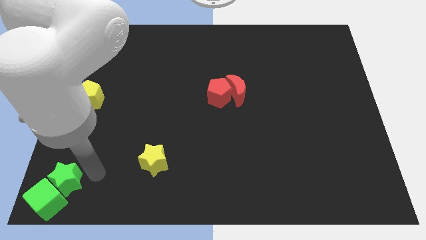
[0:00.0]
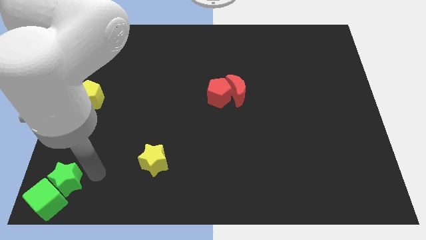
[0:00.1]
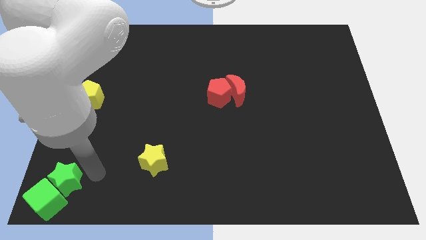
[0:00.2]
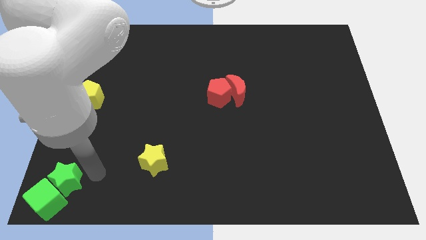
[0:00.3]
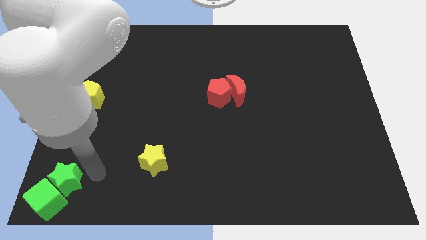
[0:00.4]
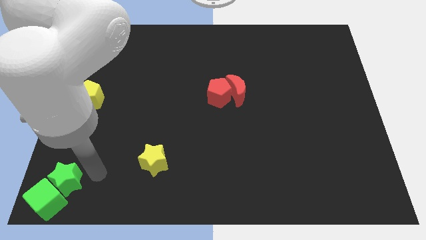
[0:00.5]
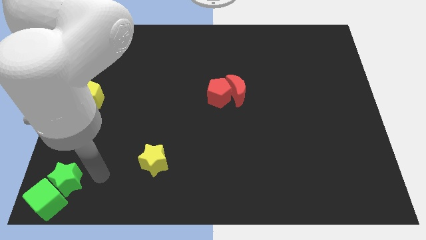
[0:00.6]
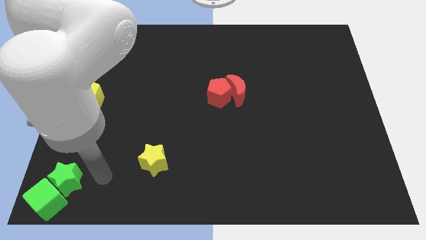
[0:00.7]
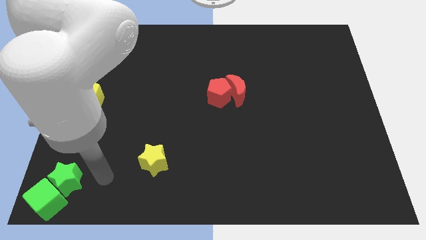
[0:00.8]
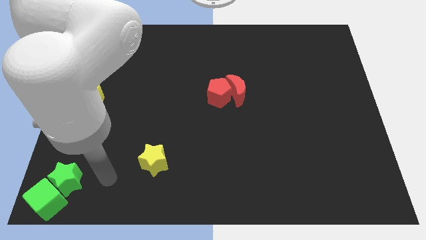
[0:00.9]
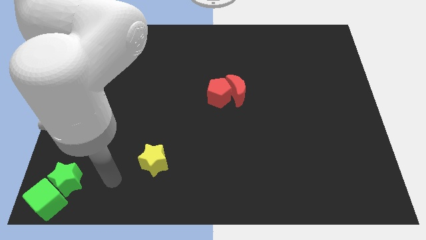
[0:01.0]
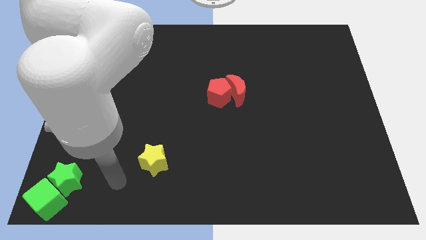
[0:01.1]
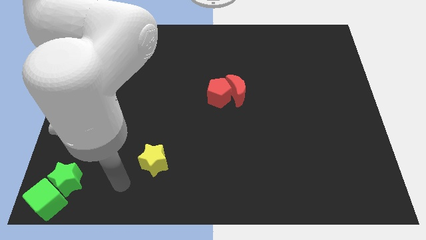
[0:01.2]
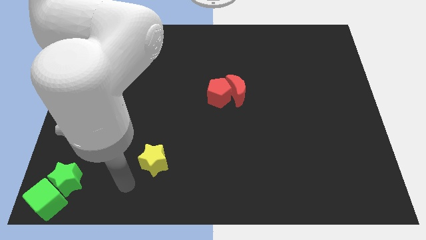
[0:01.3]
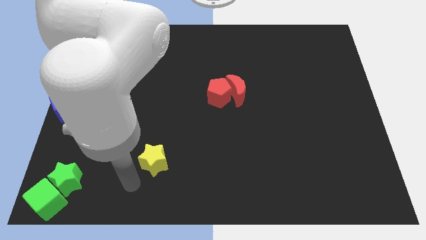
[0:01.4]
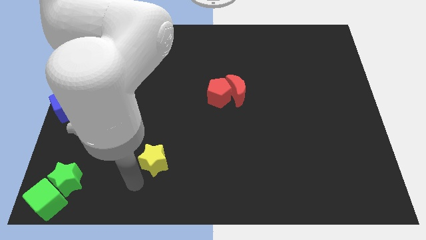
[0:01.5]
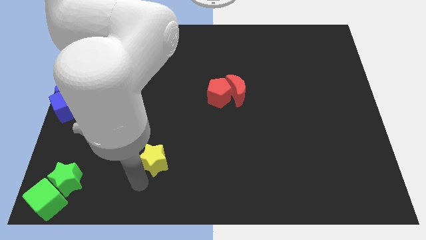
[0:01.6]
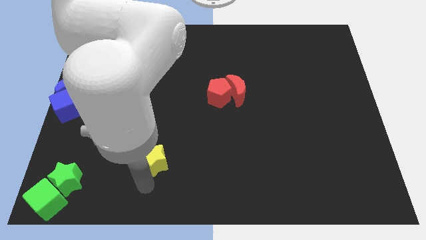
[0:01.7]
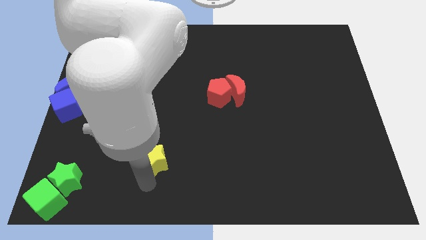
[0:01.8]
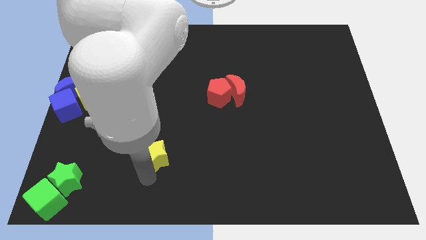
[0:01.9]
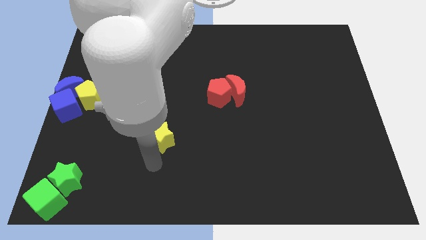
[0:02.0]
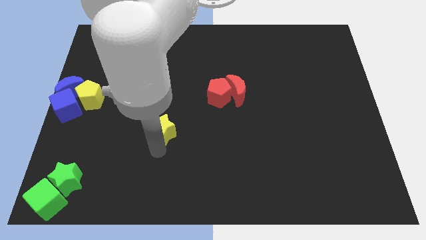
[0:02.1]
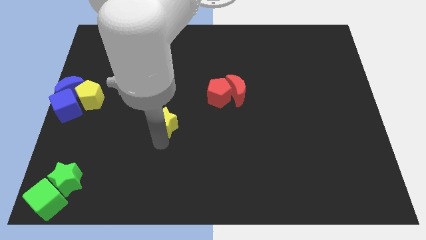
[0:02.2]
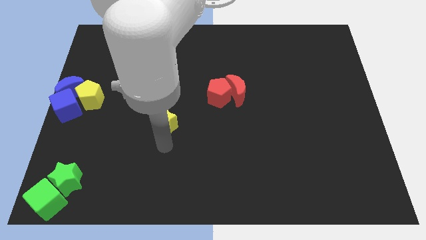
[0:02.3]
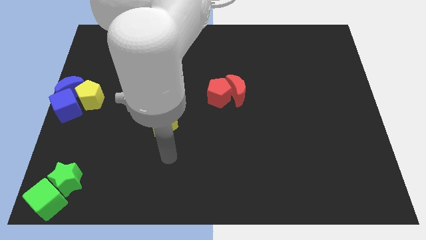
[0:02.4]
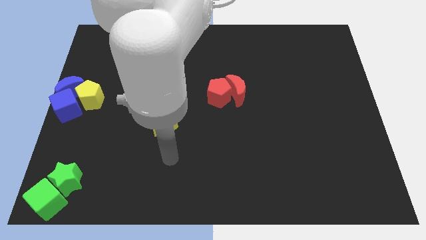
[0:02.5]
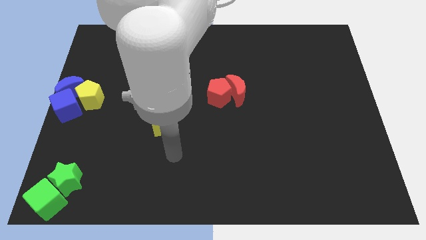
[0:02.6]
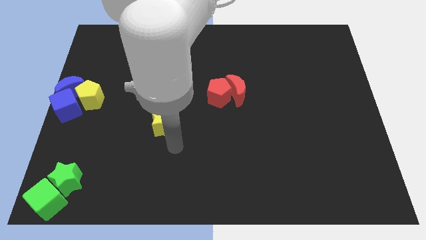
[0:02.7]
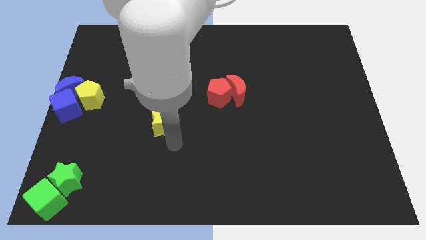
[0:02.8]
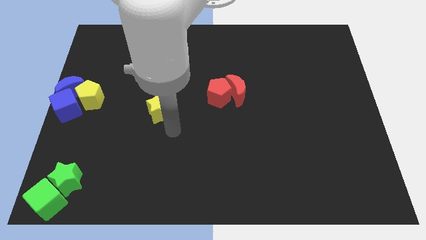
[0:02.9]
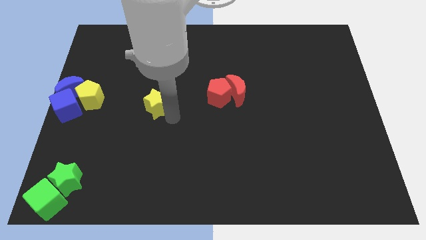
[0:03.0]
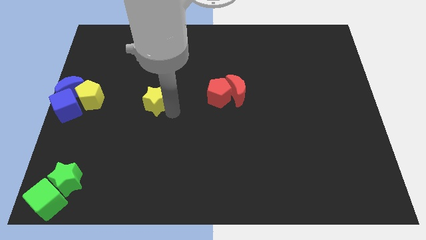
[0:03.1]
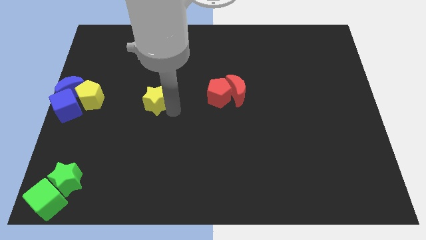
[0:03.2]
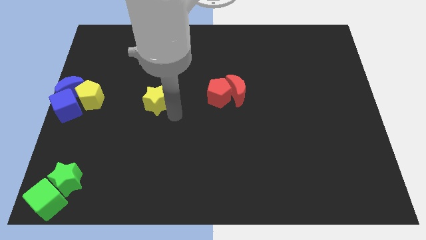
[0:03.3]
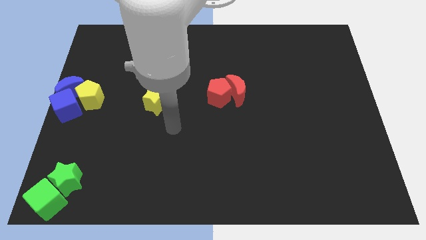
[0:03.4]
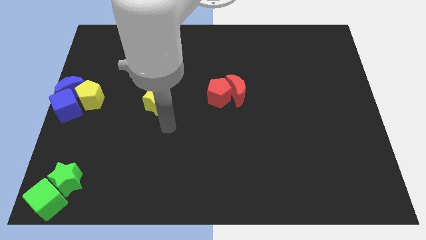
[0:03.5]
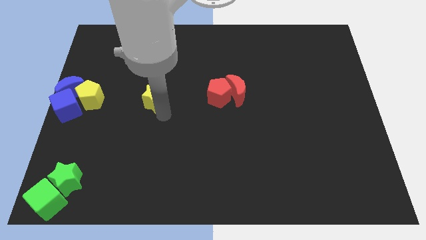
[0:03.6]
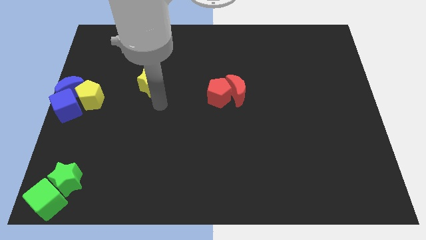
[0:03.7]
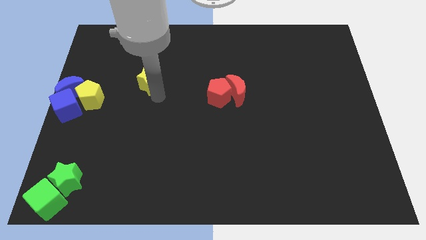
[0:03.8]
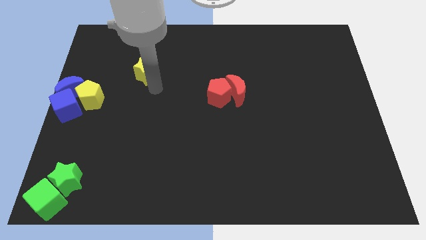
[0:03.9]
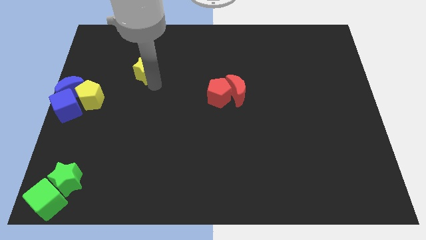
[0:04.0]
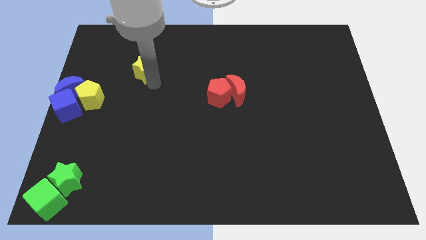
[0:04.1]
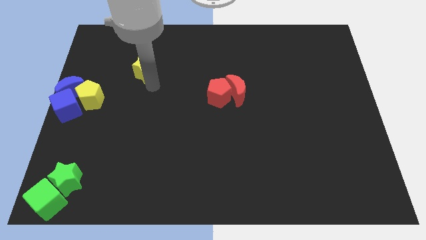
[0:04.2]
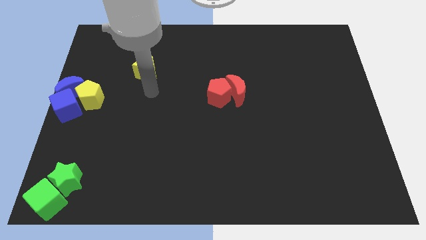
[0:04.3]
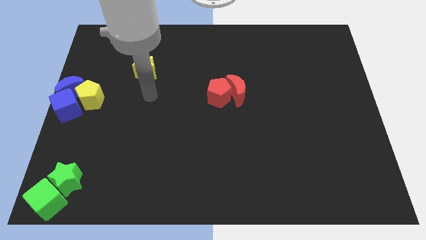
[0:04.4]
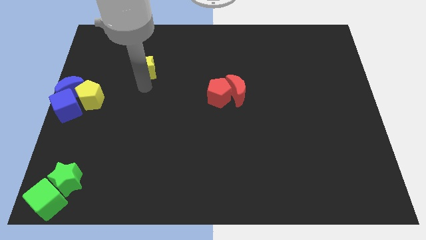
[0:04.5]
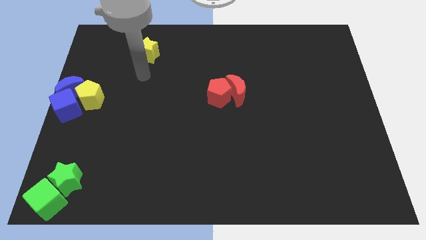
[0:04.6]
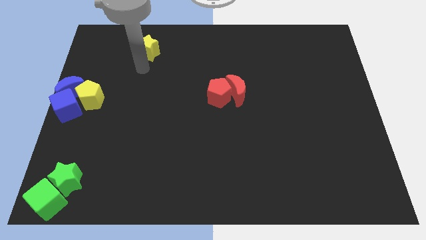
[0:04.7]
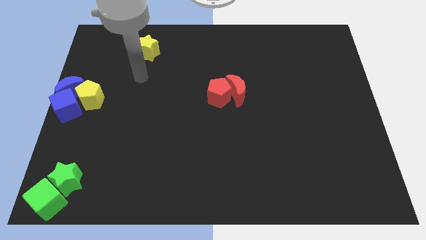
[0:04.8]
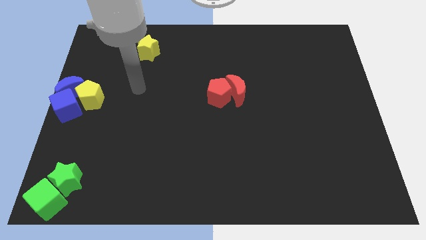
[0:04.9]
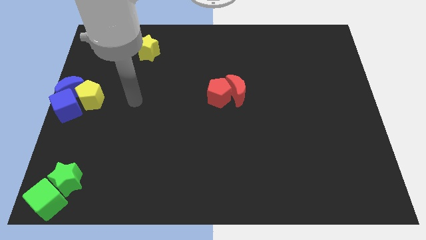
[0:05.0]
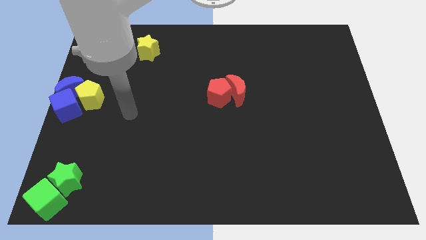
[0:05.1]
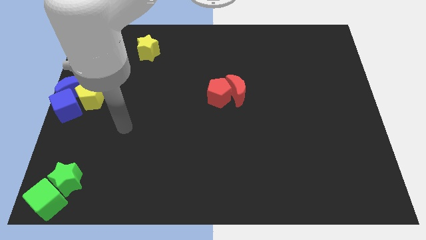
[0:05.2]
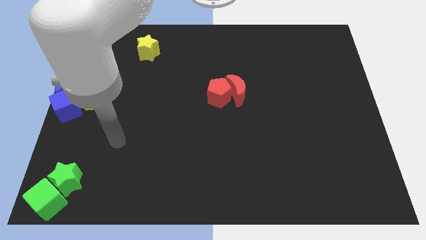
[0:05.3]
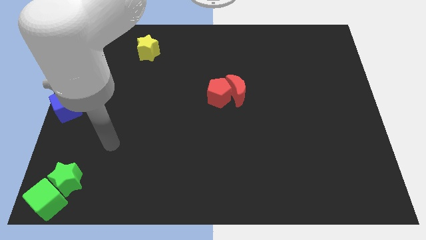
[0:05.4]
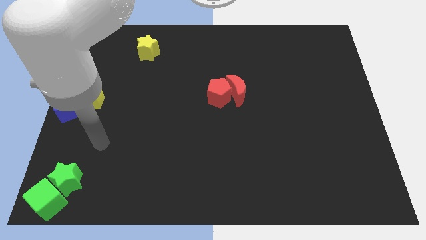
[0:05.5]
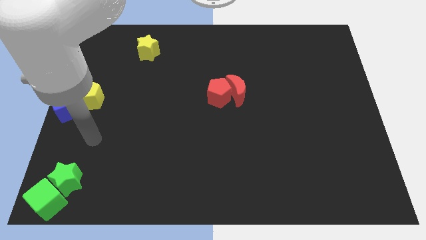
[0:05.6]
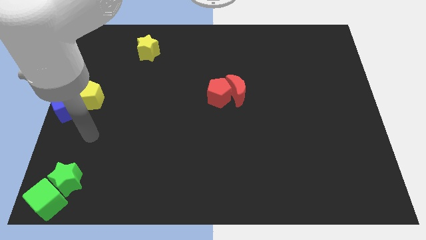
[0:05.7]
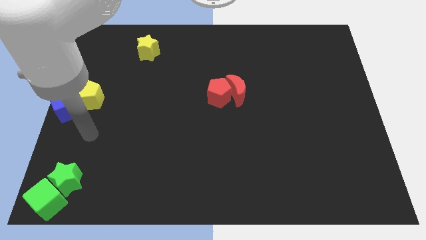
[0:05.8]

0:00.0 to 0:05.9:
put the yellow star towards the top left of the board

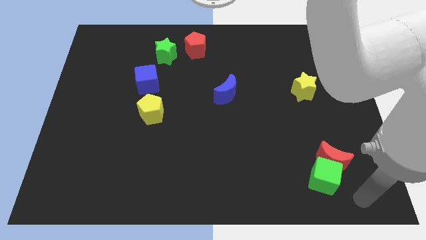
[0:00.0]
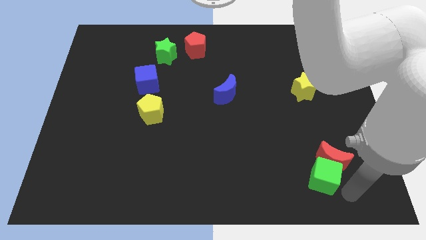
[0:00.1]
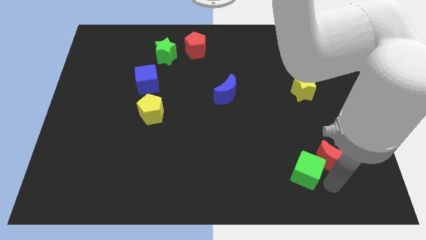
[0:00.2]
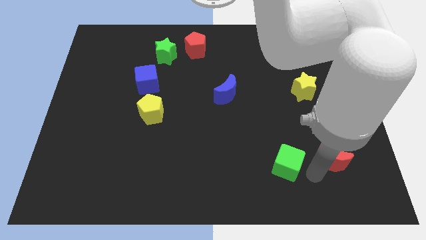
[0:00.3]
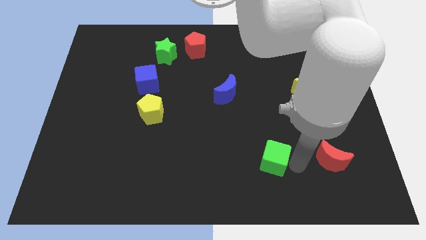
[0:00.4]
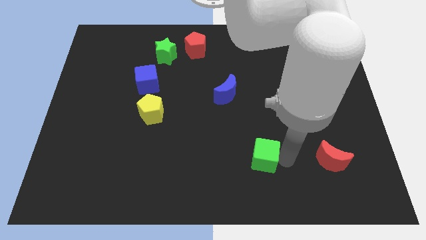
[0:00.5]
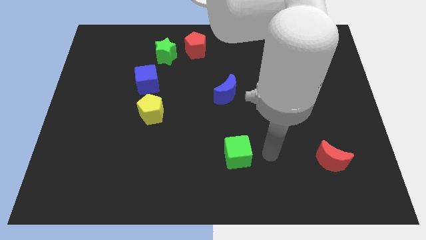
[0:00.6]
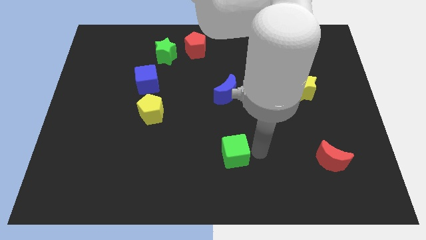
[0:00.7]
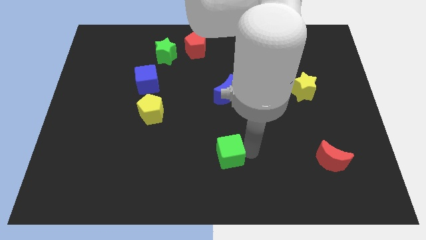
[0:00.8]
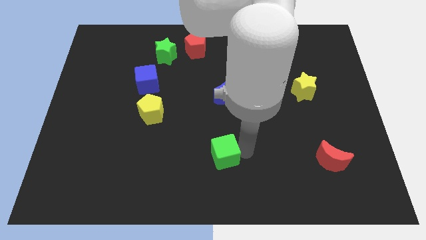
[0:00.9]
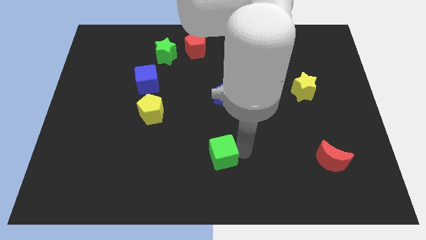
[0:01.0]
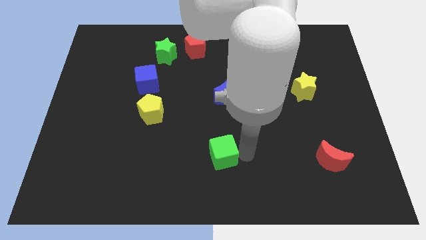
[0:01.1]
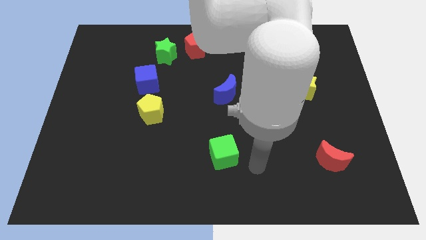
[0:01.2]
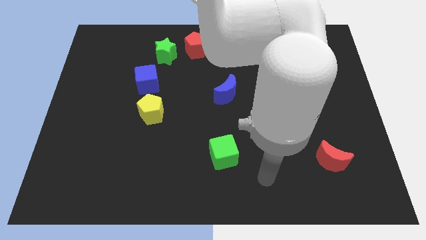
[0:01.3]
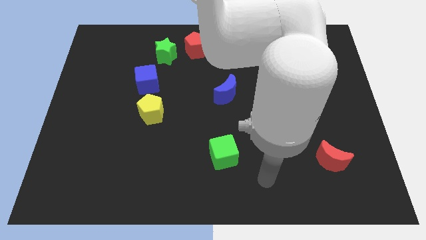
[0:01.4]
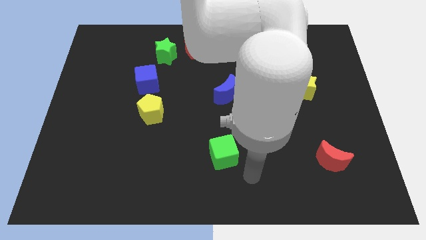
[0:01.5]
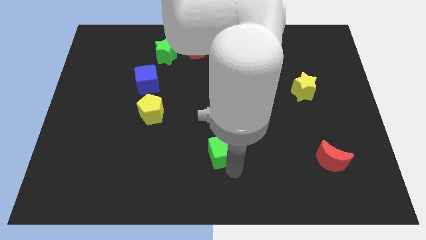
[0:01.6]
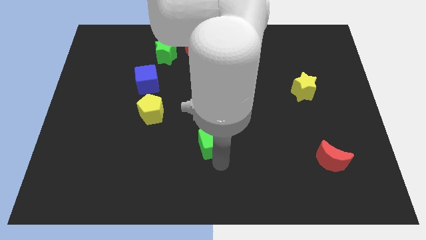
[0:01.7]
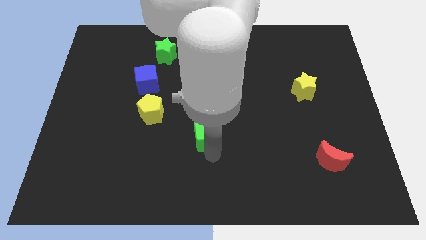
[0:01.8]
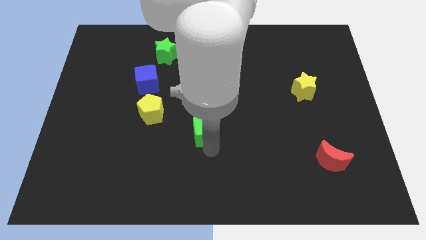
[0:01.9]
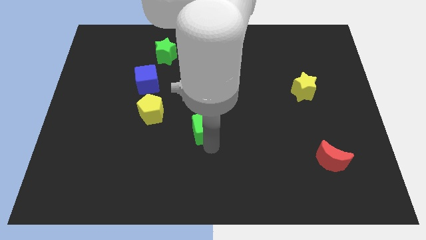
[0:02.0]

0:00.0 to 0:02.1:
push the green cube to the center of the board

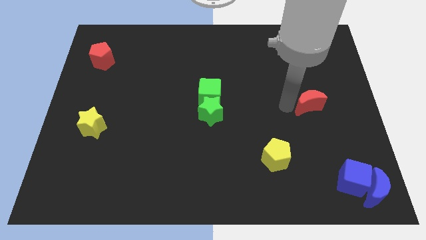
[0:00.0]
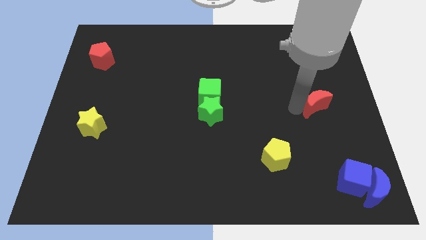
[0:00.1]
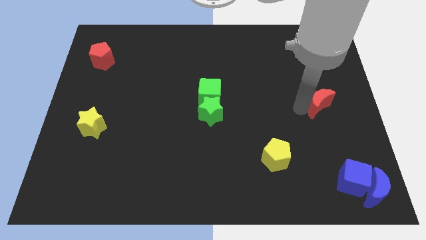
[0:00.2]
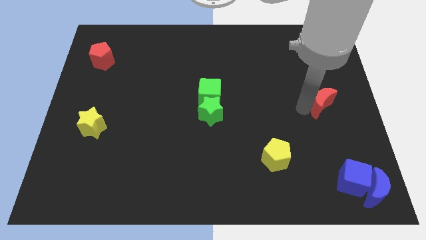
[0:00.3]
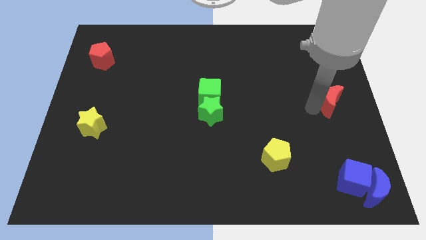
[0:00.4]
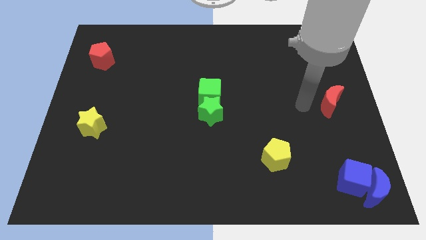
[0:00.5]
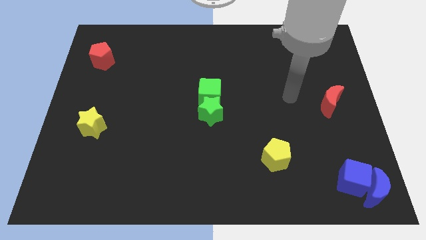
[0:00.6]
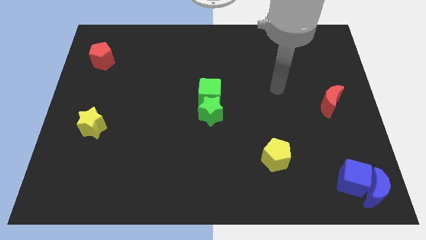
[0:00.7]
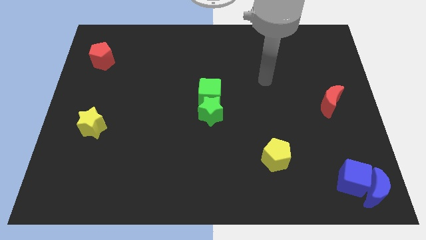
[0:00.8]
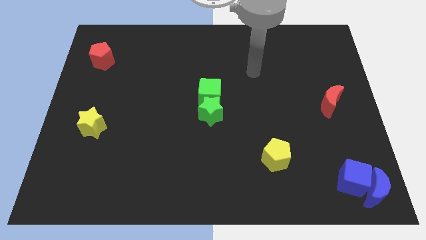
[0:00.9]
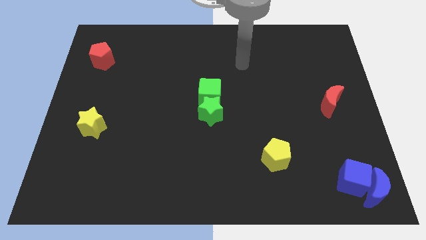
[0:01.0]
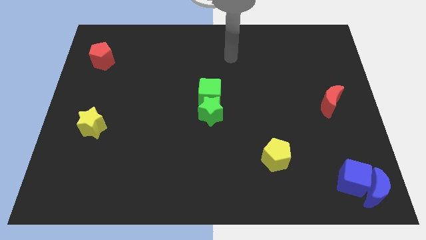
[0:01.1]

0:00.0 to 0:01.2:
push the red crescent to the right center vertically on top of the blue cube
